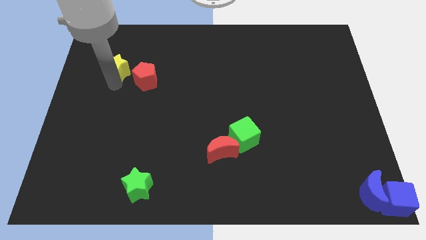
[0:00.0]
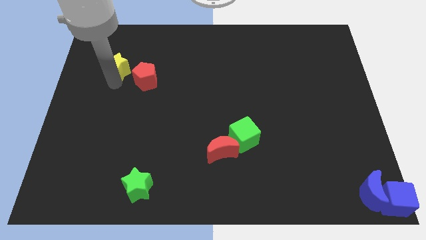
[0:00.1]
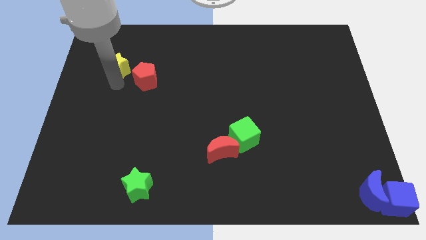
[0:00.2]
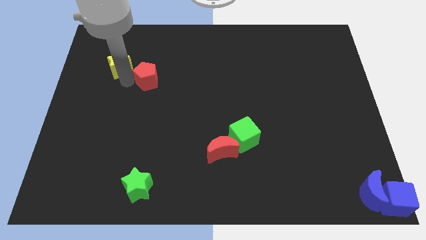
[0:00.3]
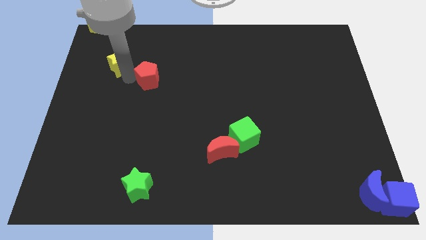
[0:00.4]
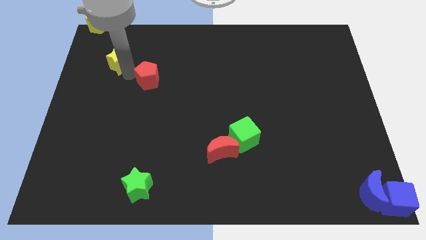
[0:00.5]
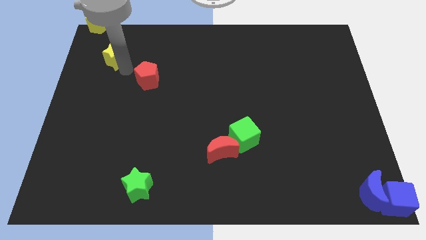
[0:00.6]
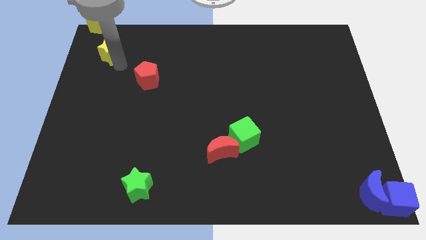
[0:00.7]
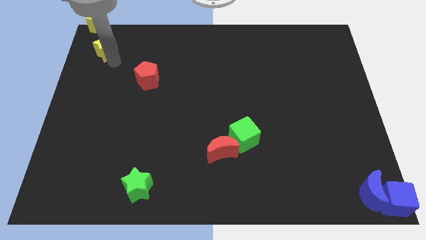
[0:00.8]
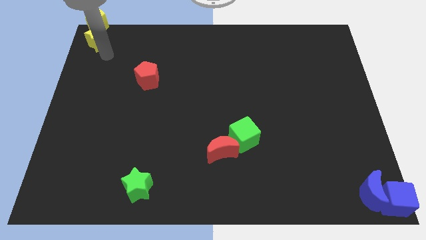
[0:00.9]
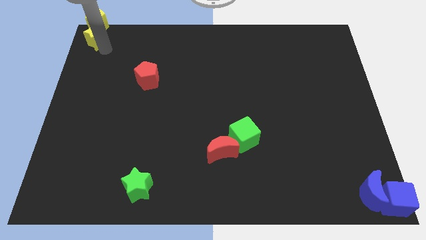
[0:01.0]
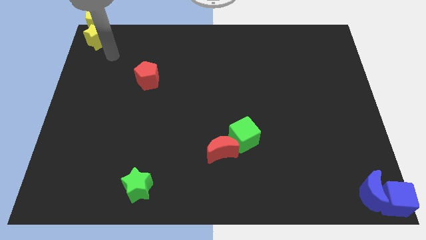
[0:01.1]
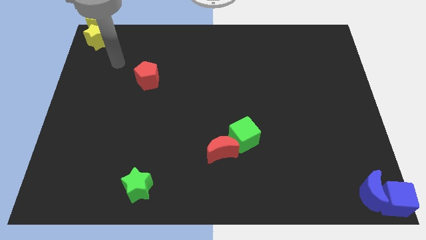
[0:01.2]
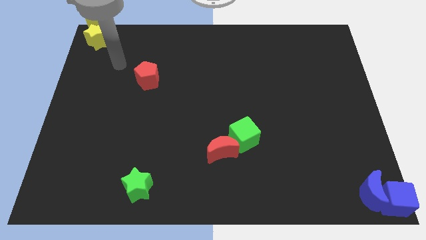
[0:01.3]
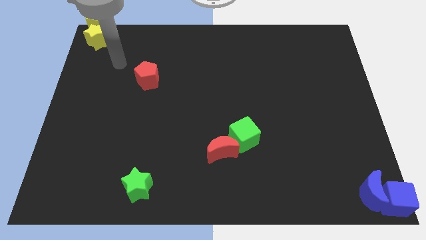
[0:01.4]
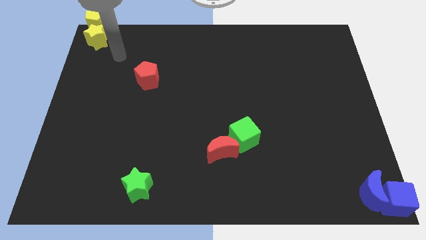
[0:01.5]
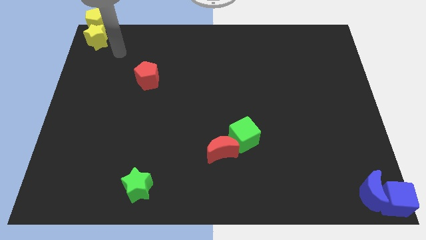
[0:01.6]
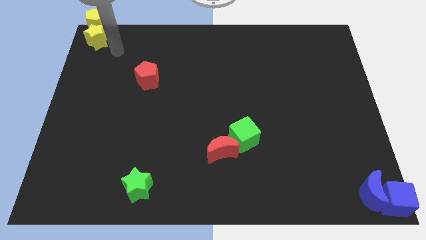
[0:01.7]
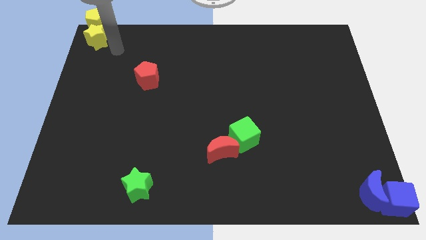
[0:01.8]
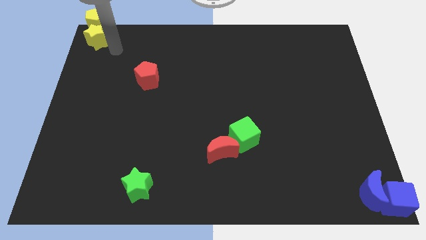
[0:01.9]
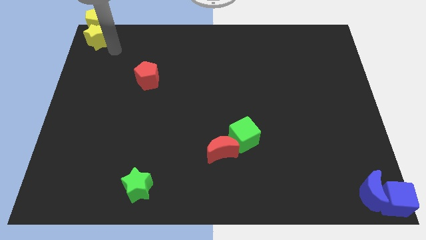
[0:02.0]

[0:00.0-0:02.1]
push the yellow star into the yellow pentagon

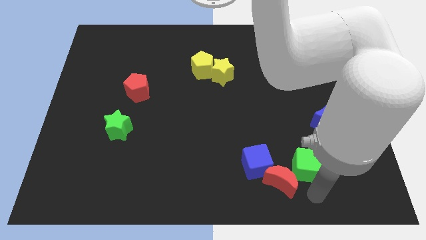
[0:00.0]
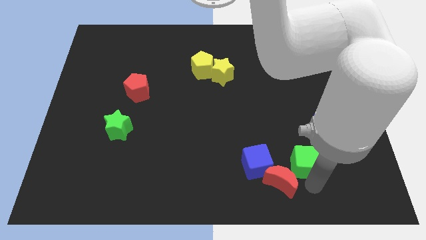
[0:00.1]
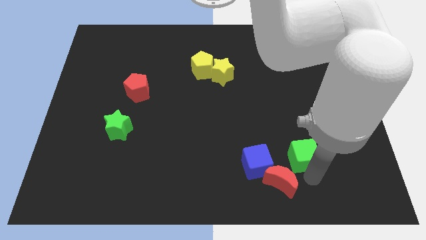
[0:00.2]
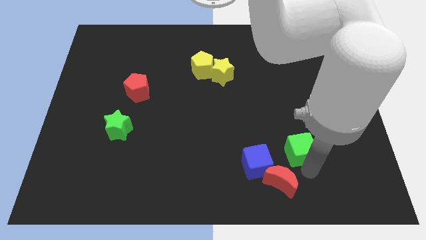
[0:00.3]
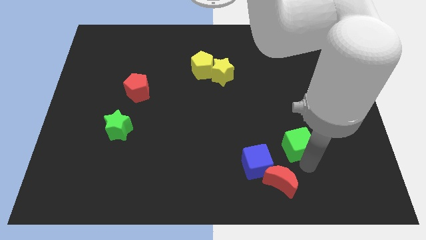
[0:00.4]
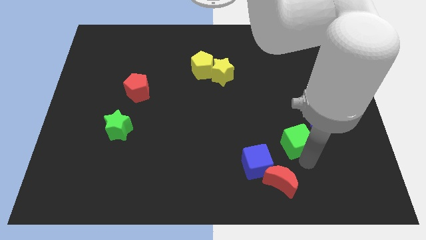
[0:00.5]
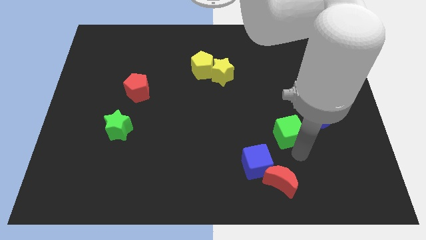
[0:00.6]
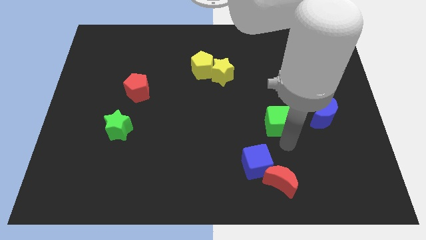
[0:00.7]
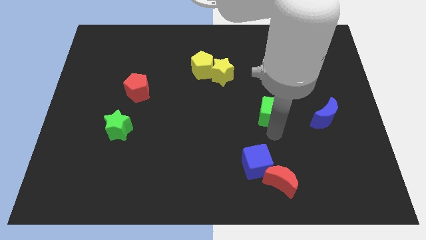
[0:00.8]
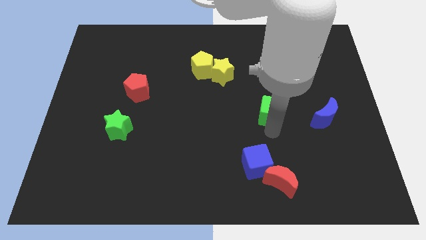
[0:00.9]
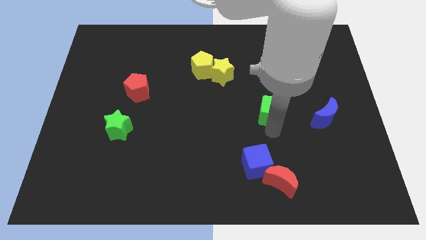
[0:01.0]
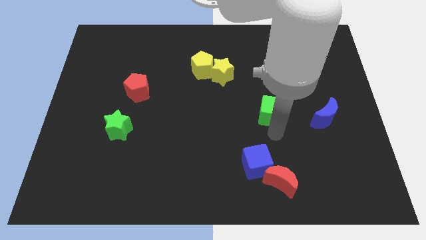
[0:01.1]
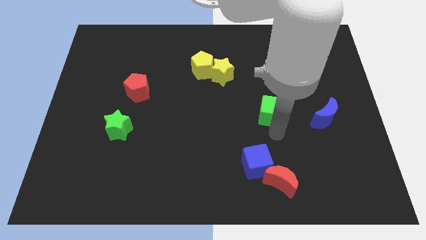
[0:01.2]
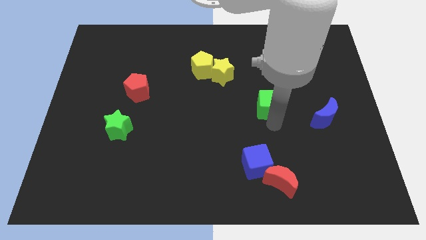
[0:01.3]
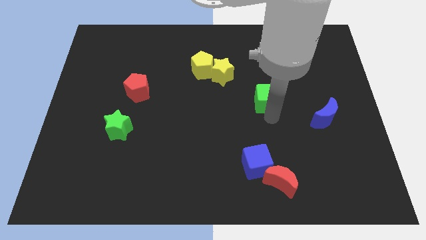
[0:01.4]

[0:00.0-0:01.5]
push the green cube towards the yellow star

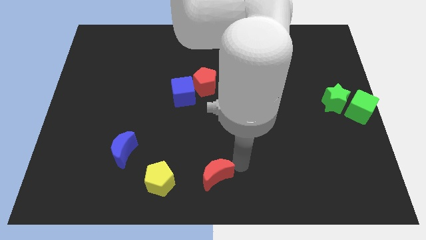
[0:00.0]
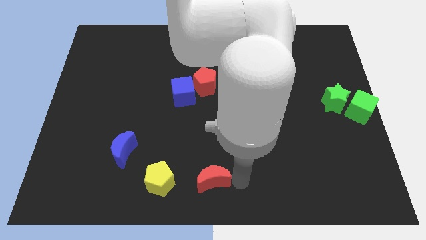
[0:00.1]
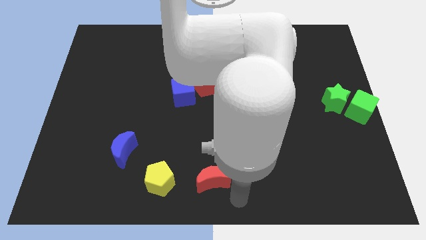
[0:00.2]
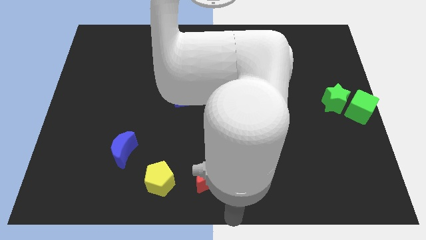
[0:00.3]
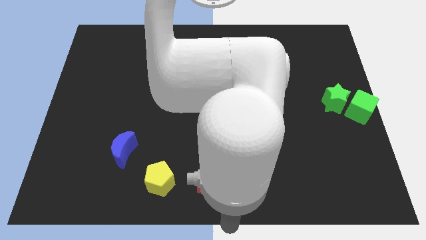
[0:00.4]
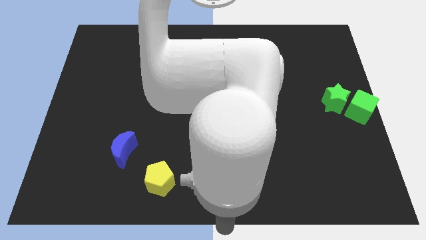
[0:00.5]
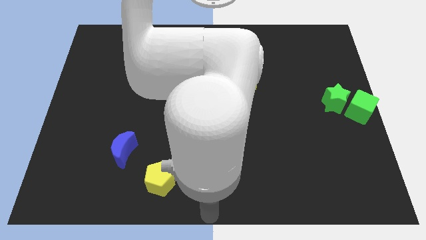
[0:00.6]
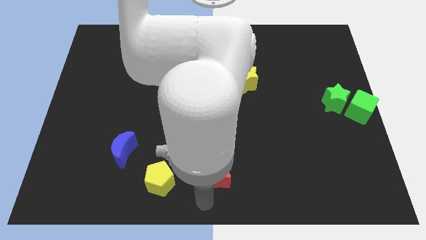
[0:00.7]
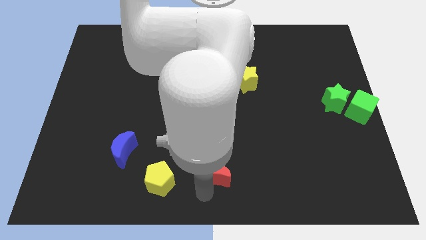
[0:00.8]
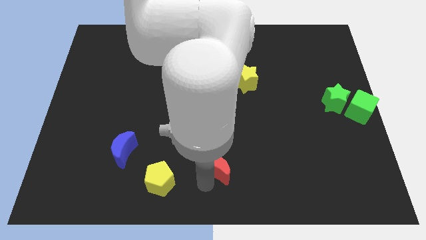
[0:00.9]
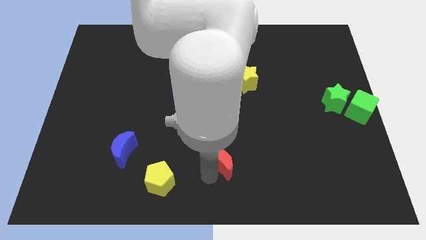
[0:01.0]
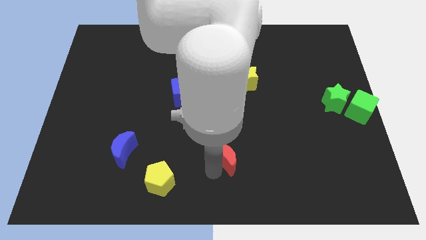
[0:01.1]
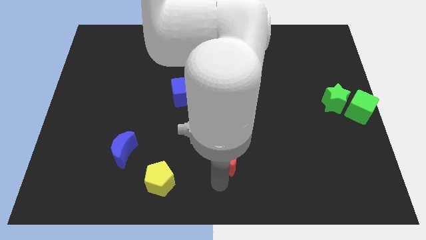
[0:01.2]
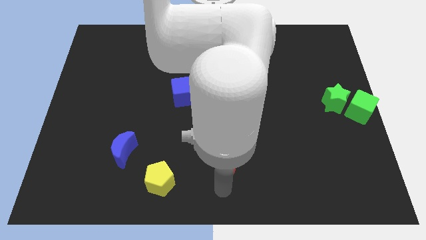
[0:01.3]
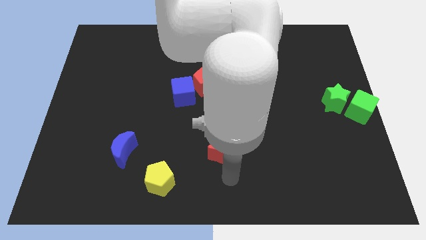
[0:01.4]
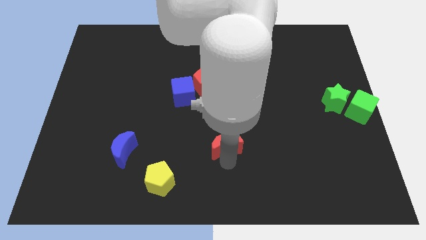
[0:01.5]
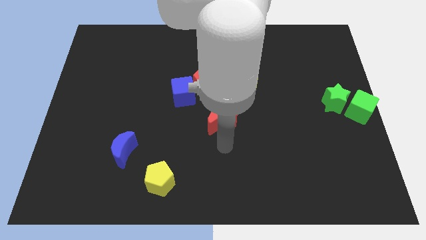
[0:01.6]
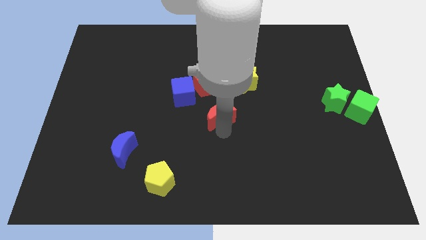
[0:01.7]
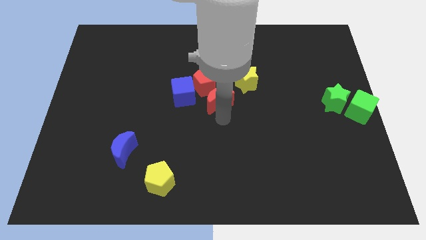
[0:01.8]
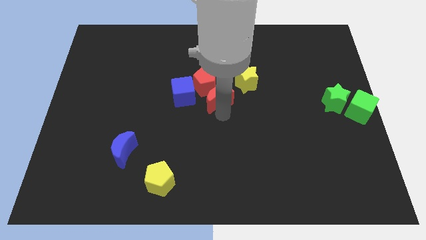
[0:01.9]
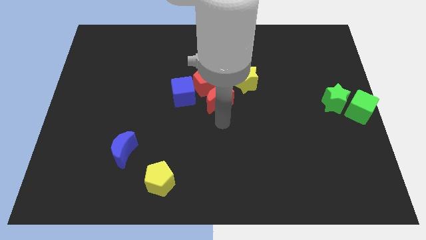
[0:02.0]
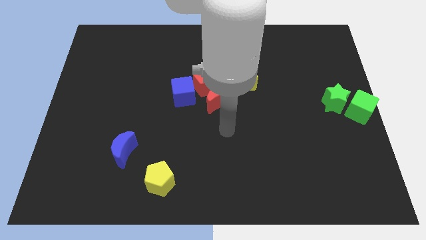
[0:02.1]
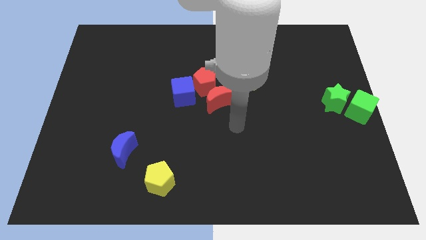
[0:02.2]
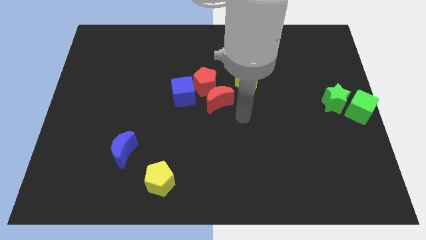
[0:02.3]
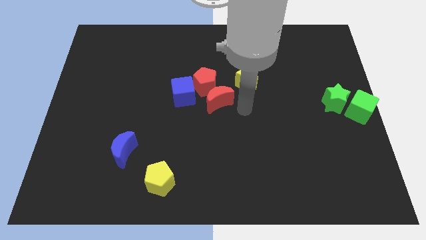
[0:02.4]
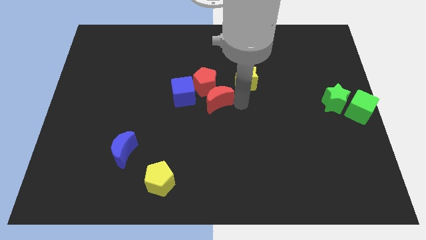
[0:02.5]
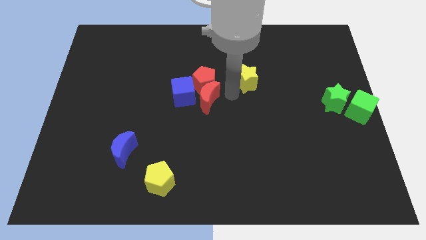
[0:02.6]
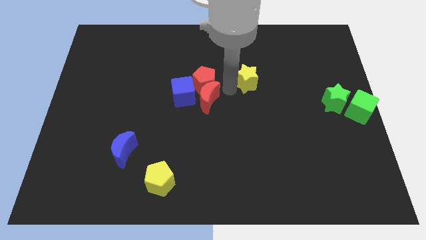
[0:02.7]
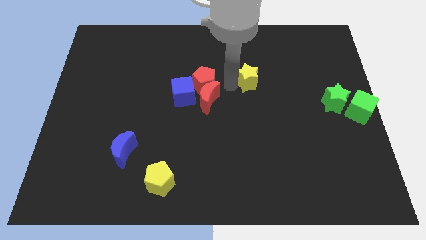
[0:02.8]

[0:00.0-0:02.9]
move the red moon to bottom of the red pentagon

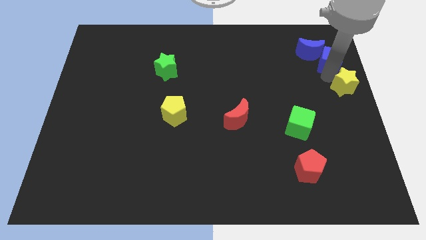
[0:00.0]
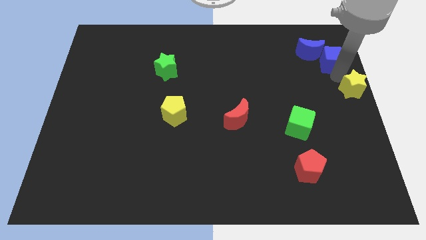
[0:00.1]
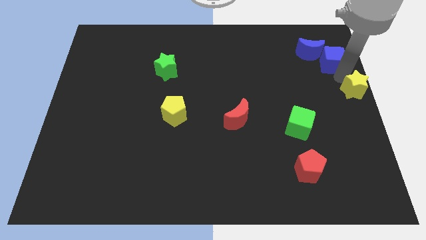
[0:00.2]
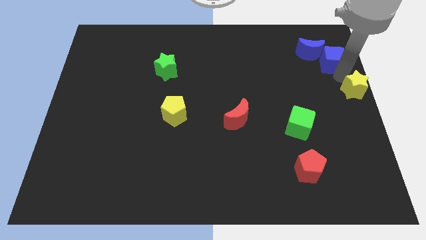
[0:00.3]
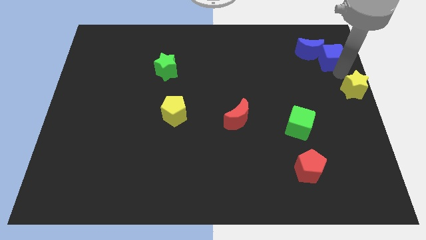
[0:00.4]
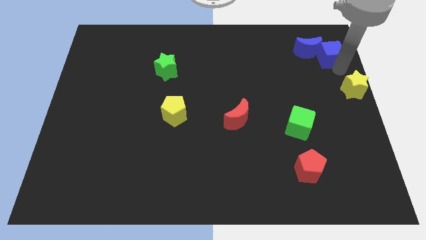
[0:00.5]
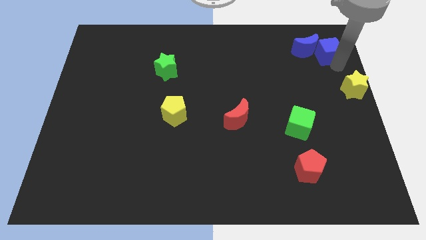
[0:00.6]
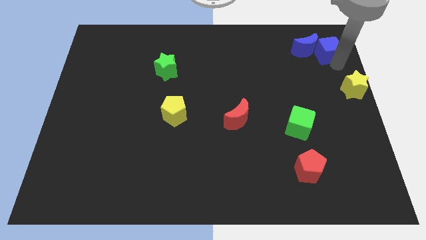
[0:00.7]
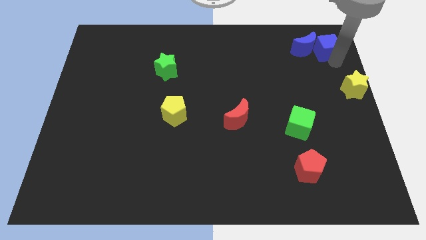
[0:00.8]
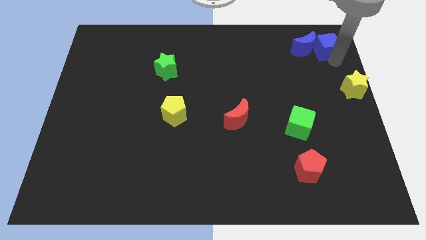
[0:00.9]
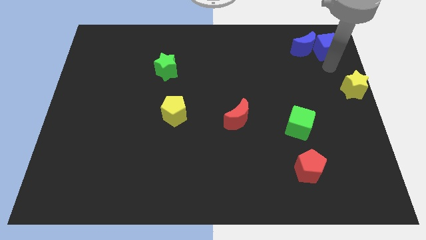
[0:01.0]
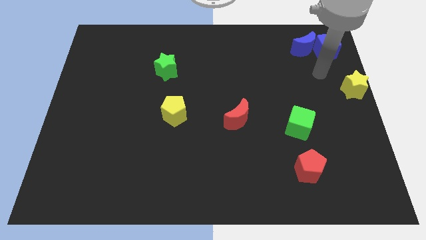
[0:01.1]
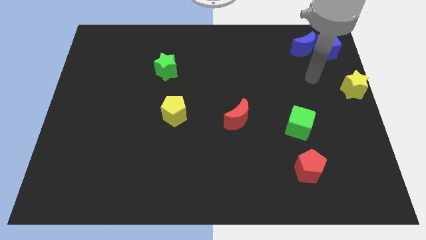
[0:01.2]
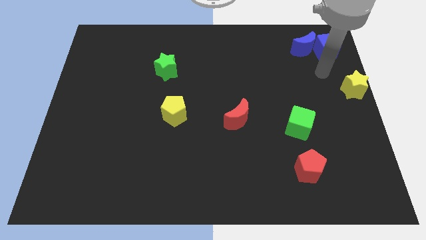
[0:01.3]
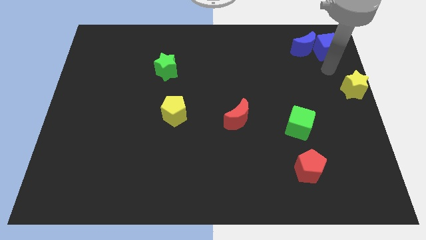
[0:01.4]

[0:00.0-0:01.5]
place blue cube towards the top right corner of the board

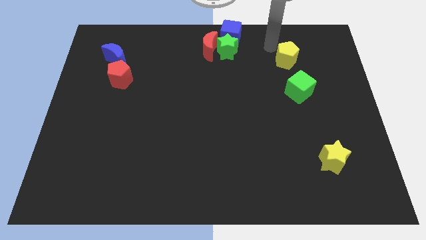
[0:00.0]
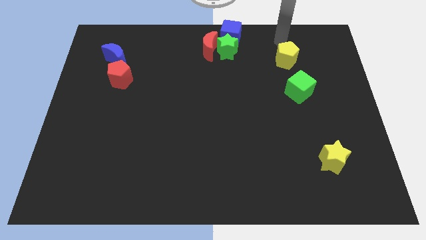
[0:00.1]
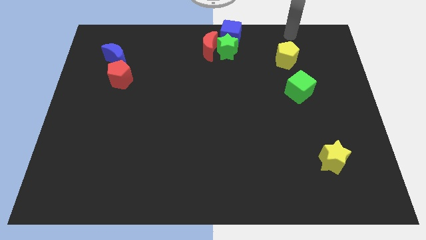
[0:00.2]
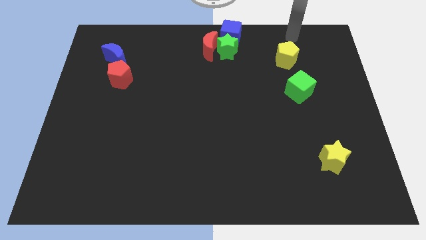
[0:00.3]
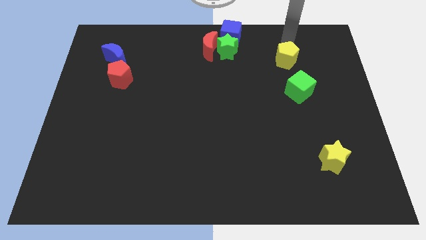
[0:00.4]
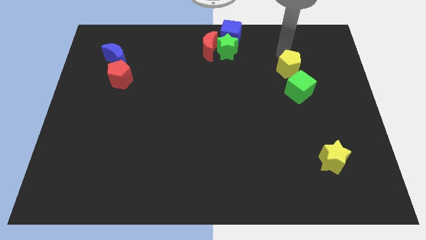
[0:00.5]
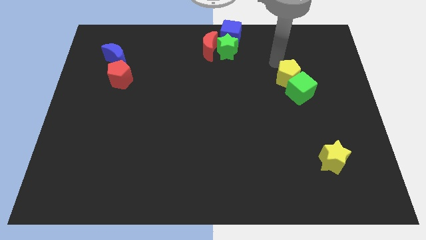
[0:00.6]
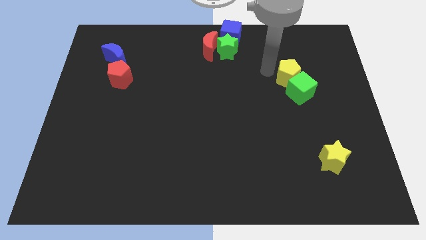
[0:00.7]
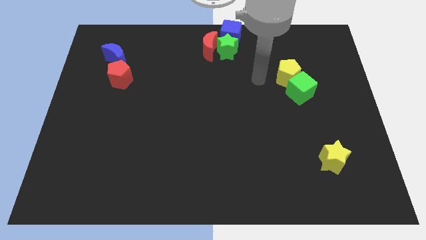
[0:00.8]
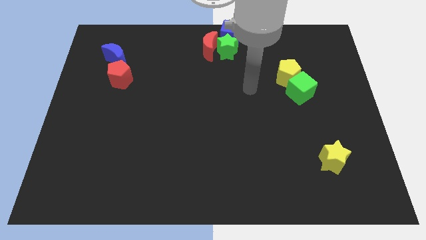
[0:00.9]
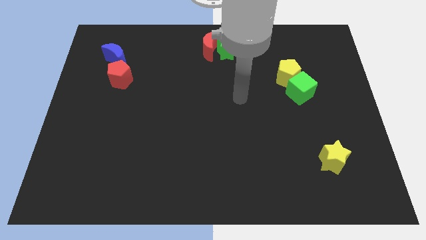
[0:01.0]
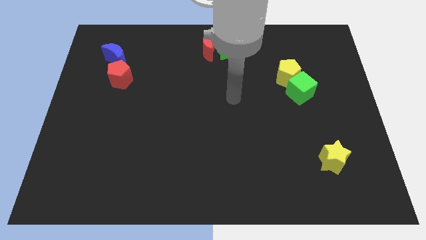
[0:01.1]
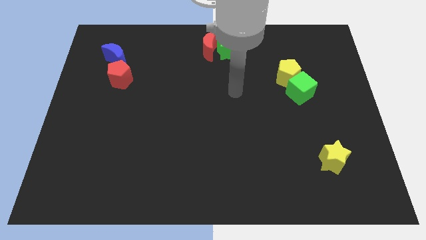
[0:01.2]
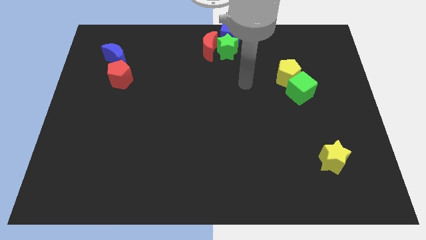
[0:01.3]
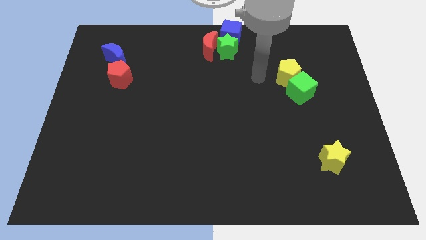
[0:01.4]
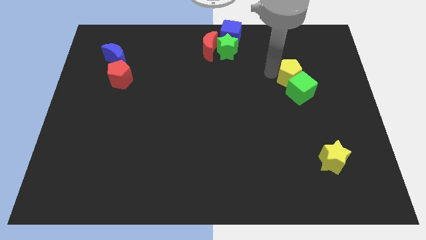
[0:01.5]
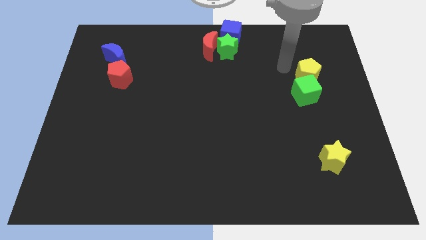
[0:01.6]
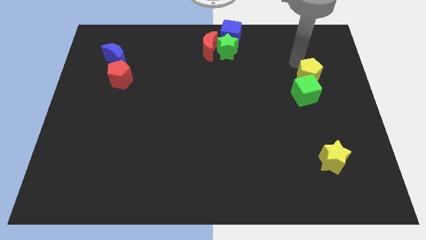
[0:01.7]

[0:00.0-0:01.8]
push the yellow pentagon into the green cube
